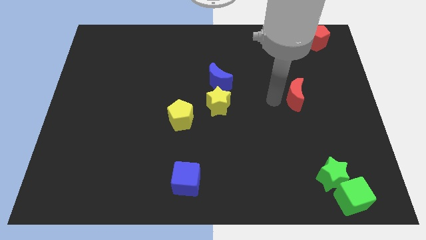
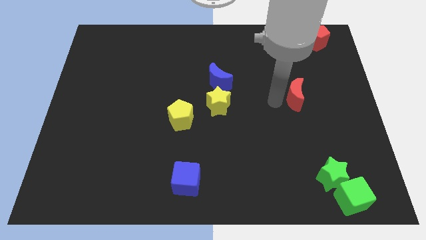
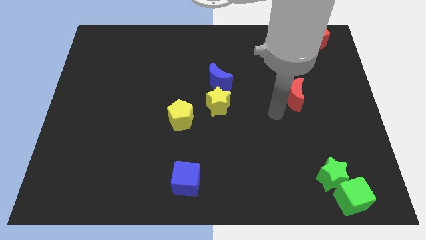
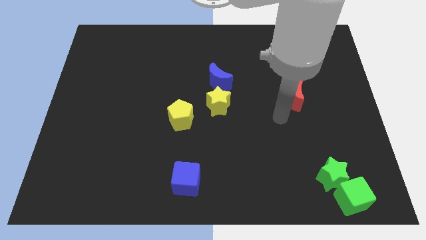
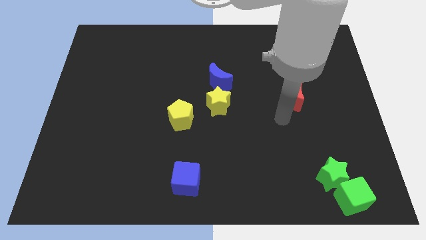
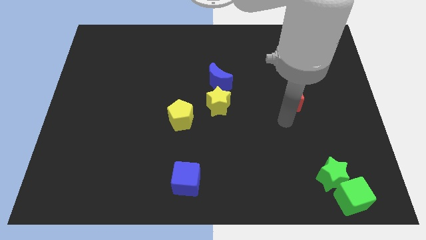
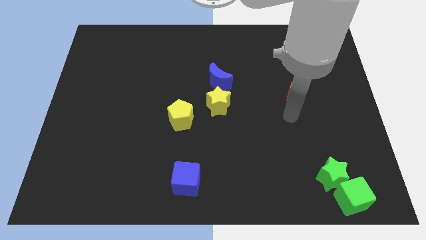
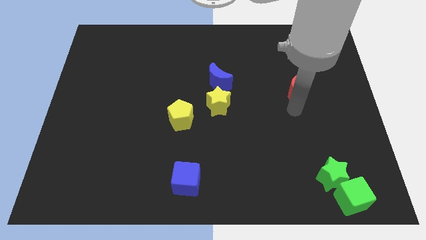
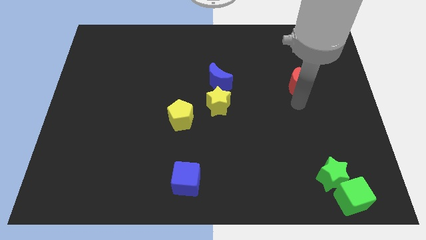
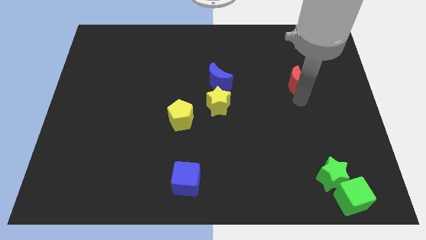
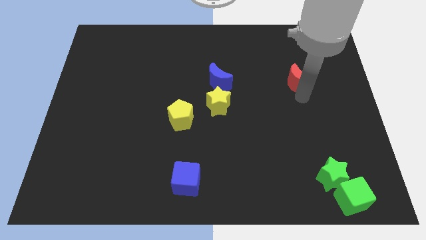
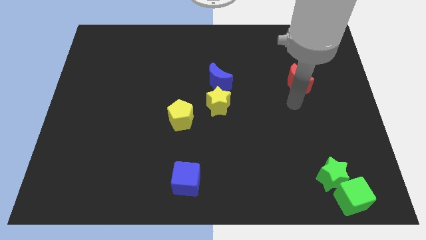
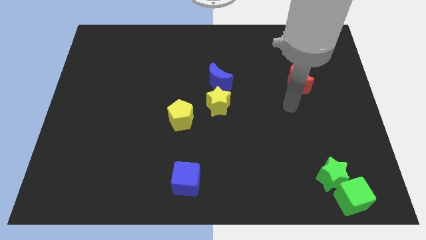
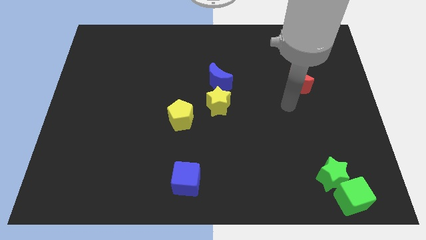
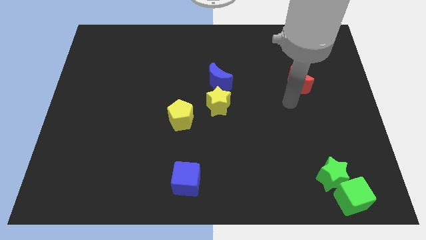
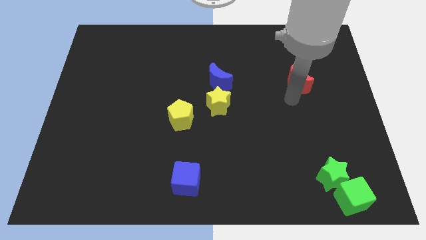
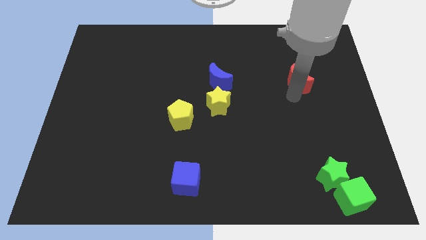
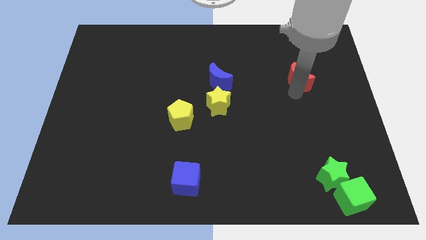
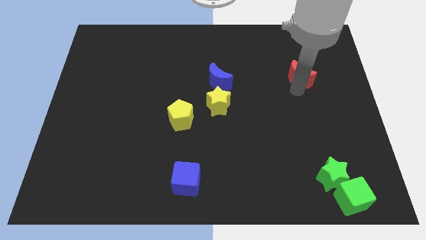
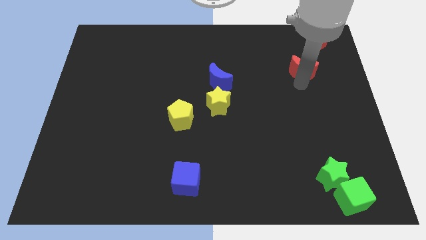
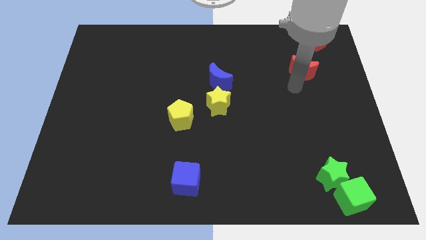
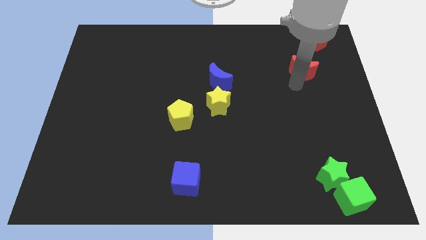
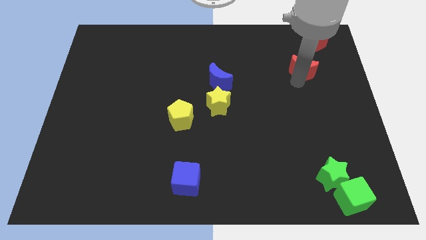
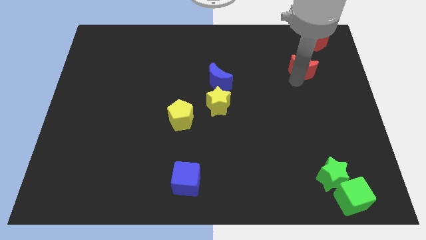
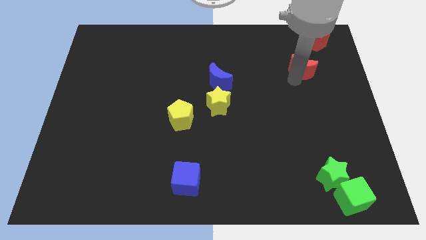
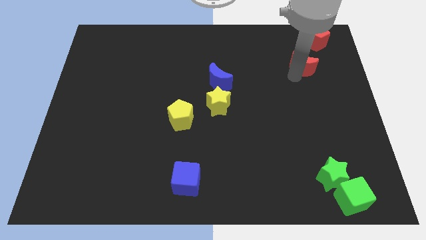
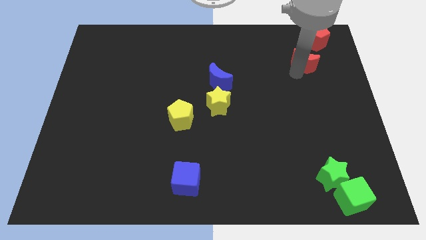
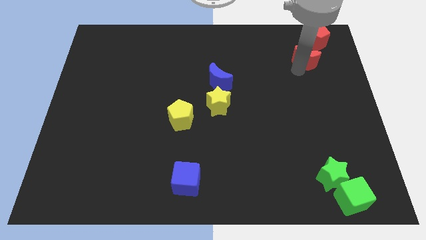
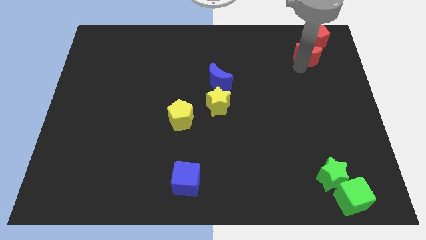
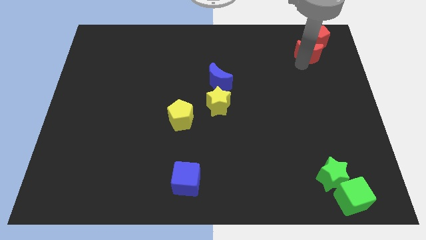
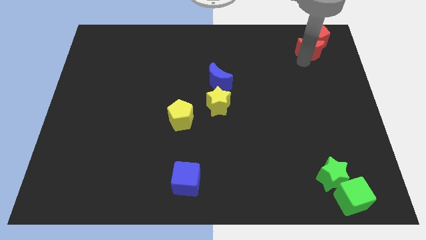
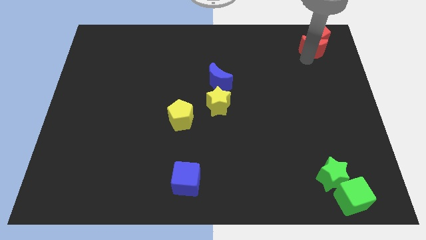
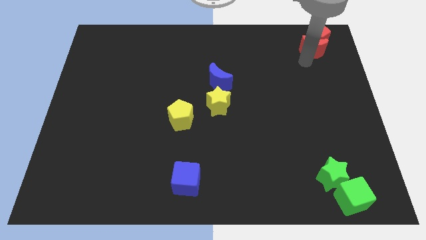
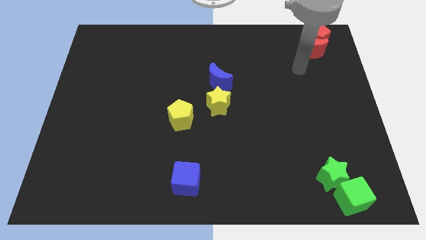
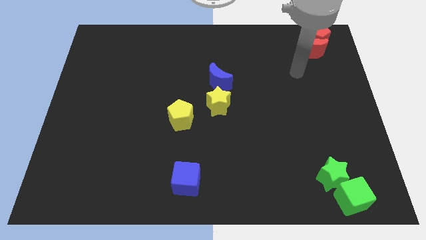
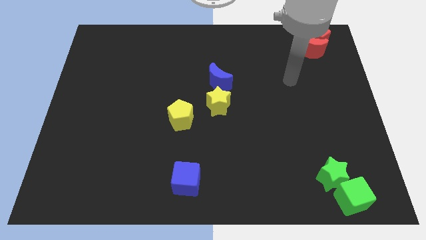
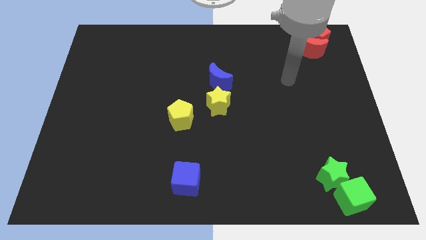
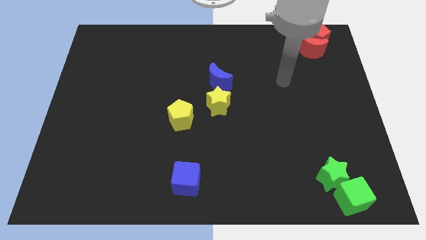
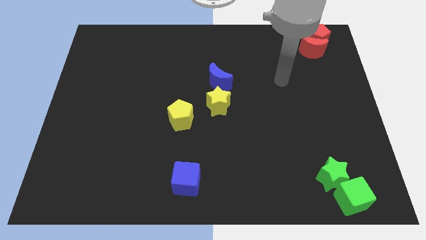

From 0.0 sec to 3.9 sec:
place the red crescent to bottom of the red pentagon

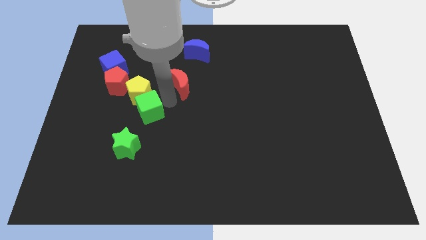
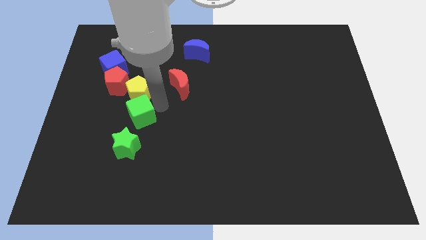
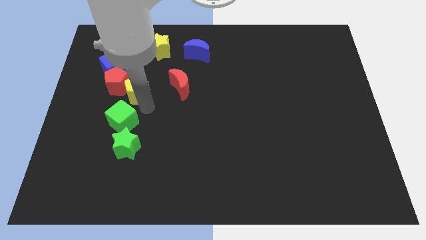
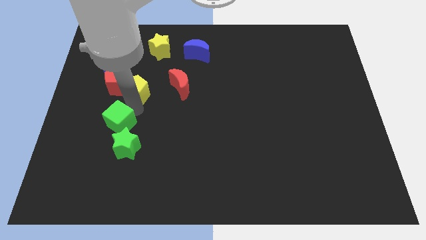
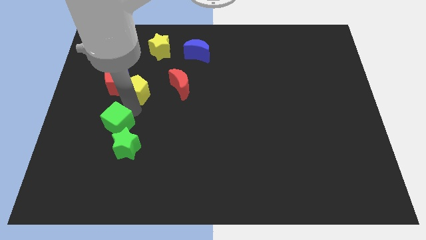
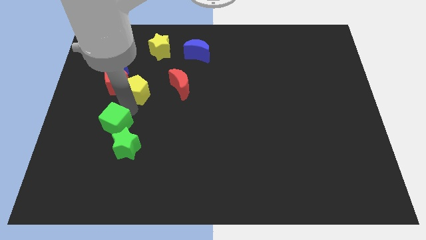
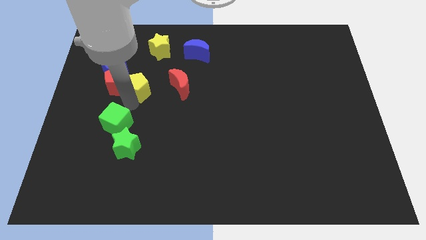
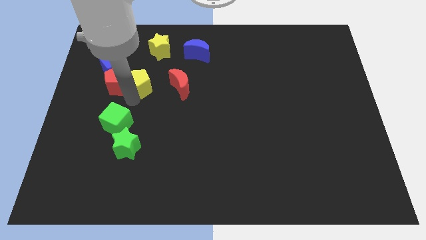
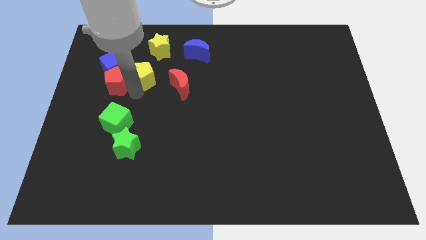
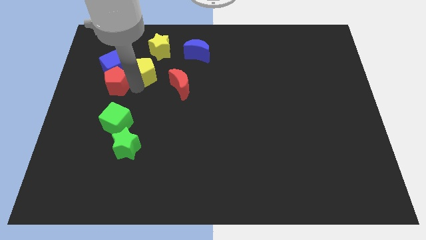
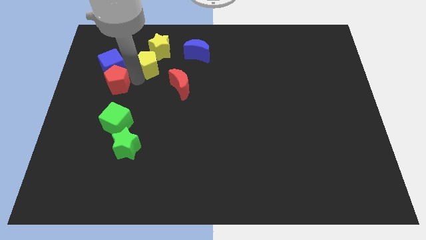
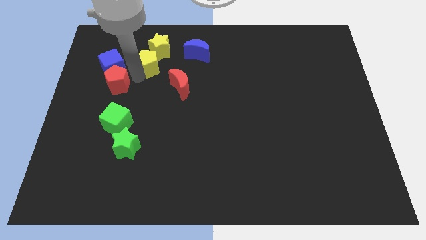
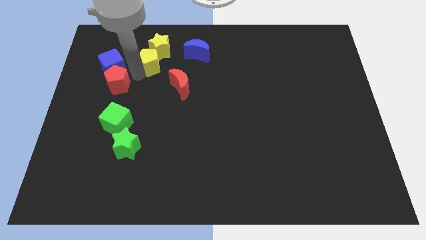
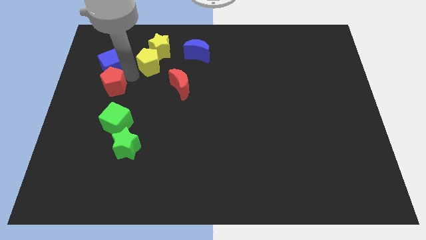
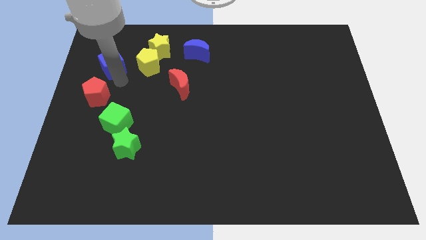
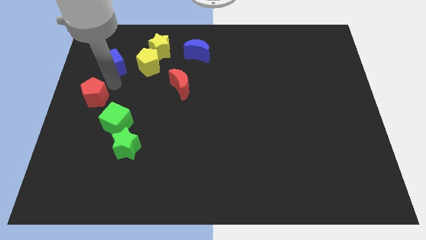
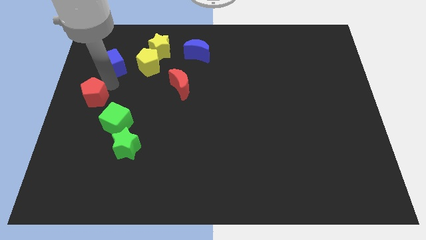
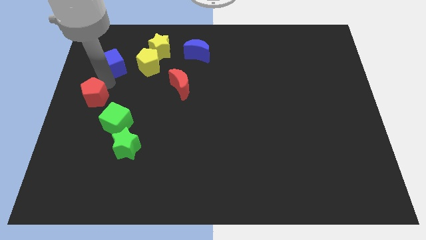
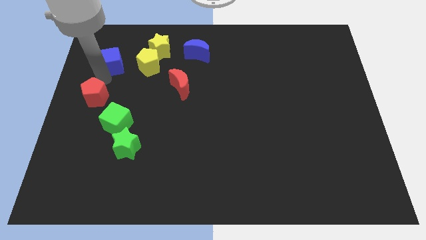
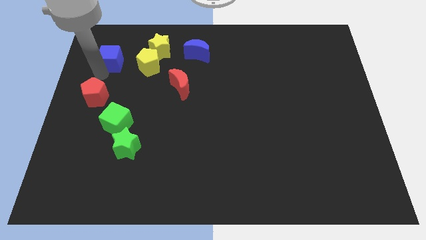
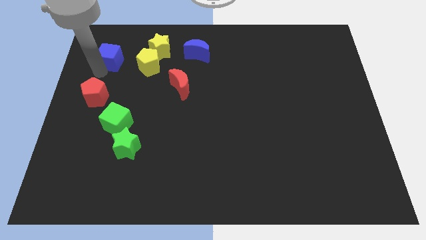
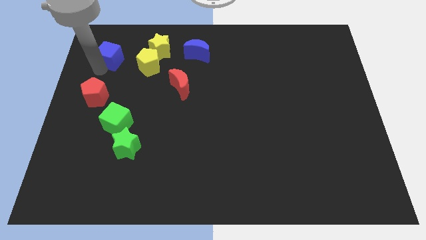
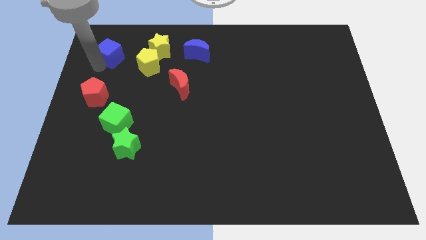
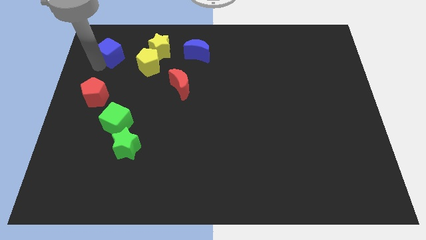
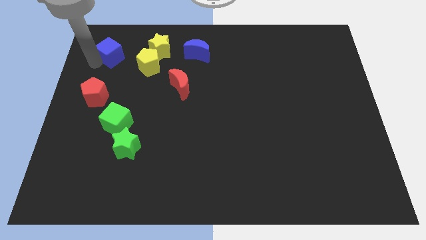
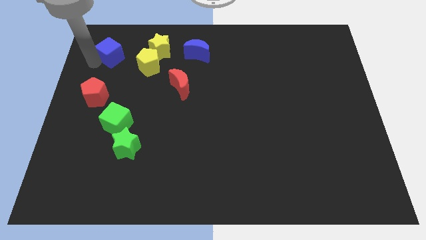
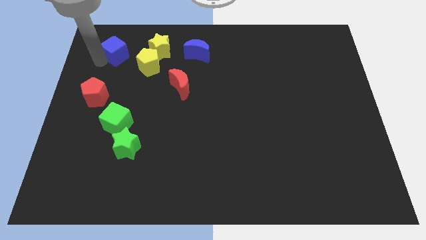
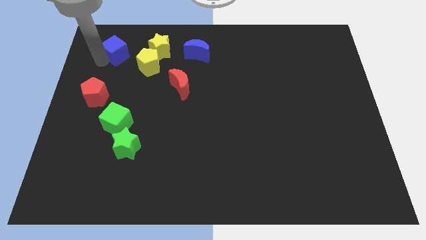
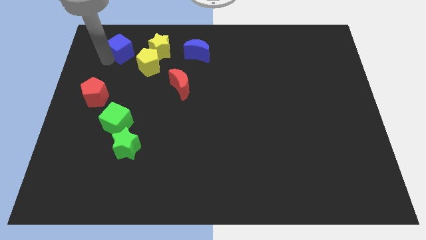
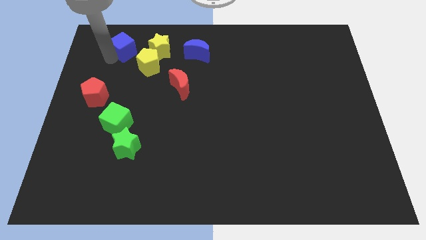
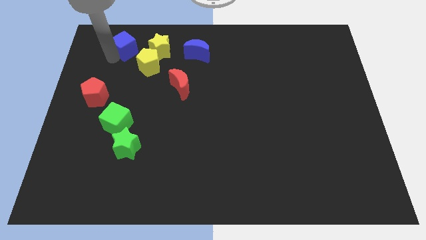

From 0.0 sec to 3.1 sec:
separate red and yellow pentagon from the group of blocks

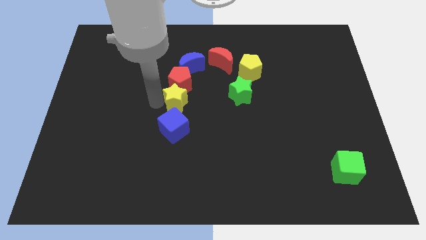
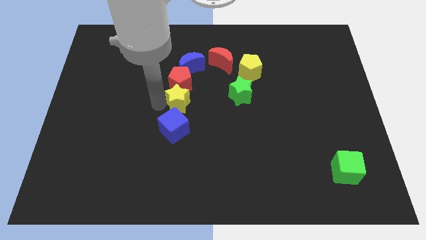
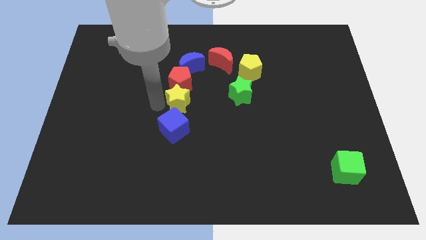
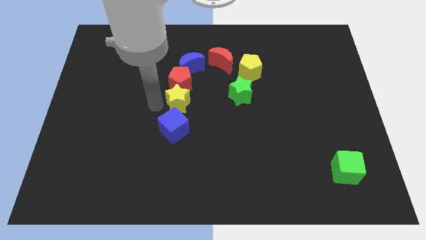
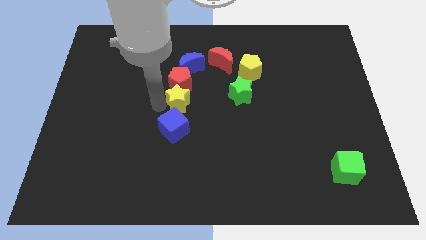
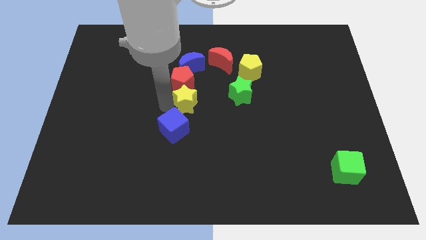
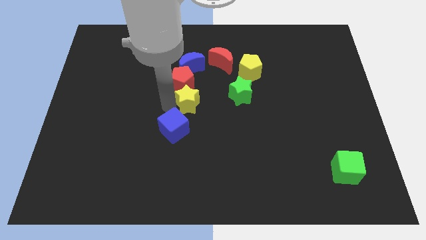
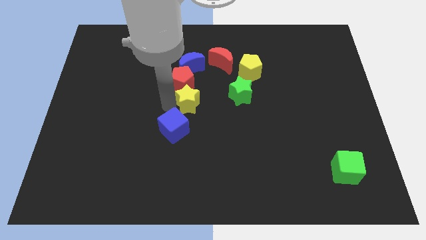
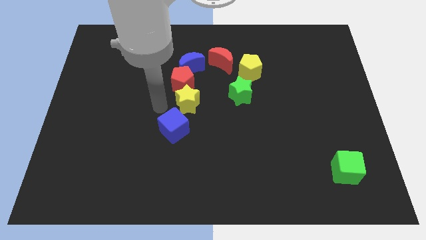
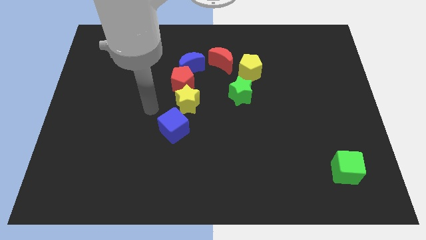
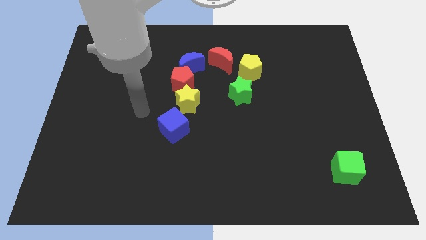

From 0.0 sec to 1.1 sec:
slide the yellow star to the right side slightly

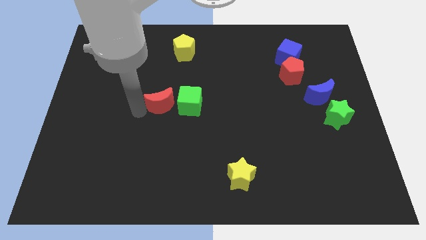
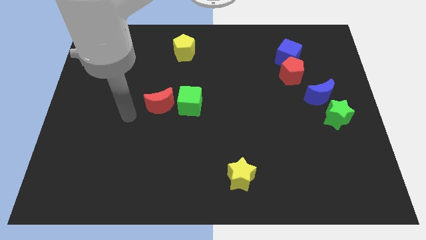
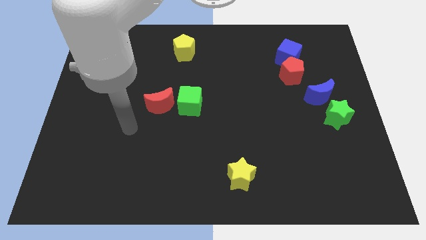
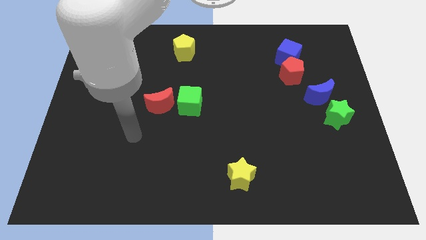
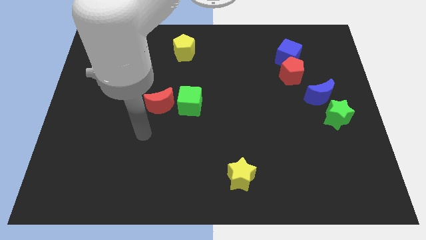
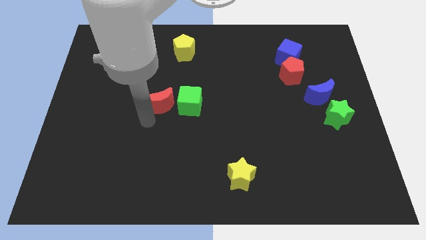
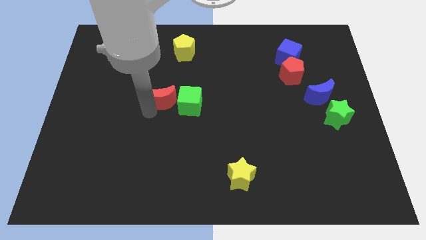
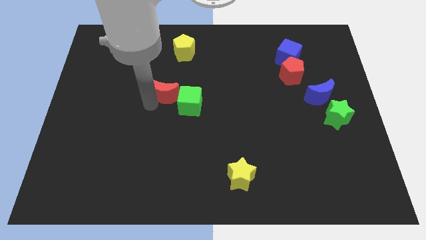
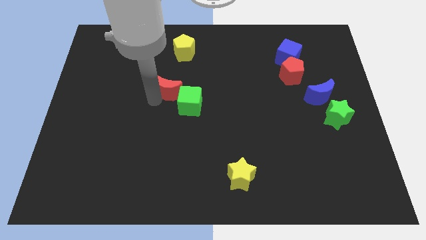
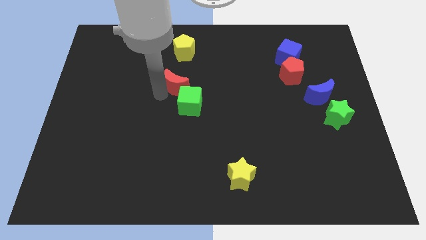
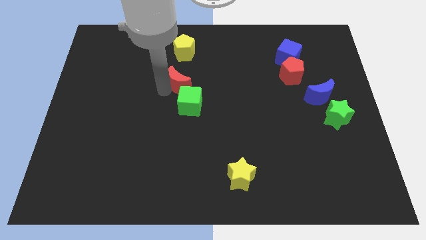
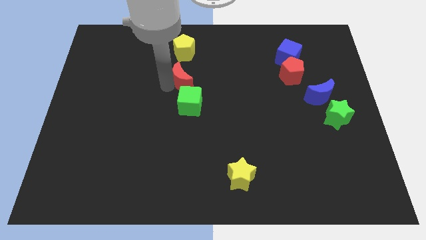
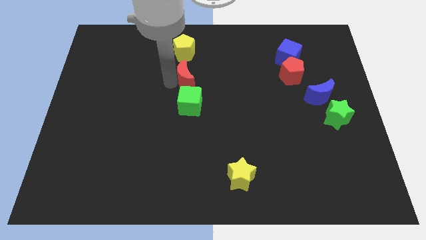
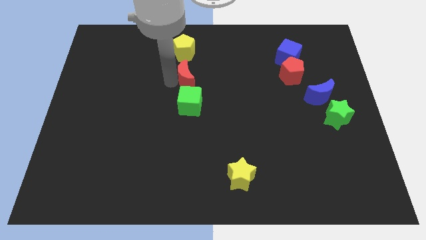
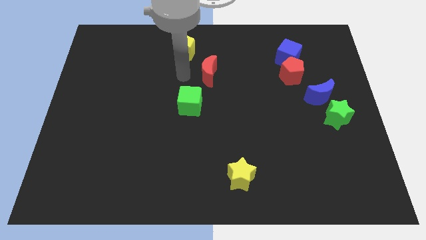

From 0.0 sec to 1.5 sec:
place the red moon in between the green cube and yellow pentagon
